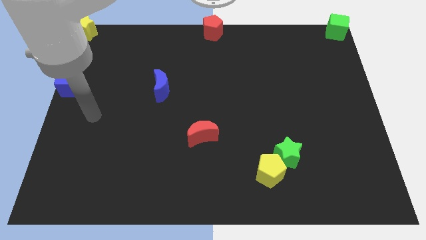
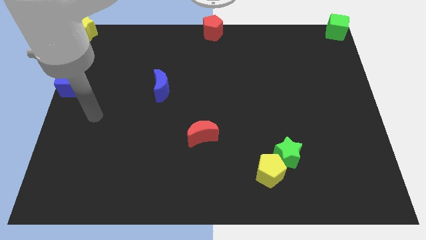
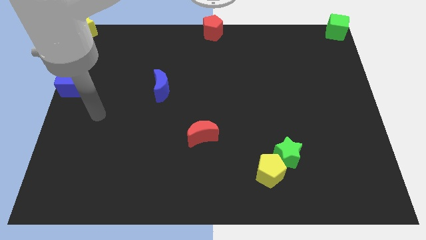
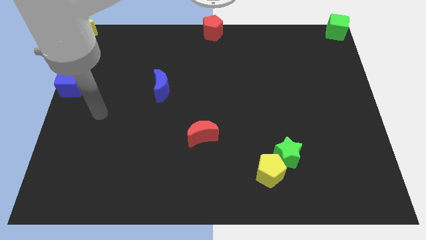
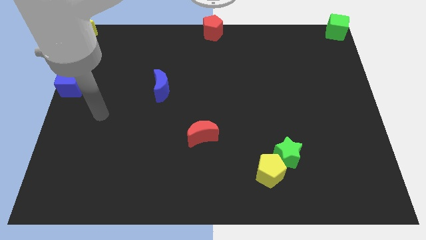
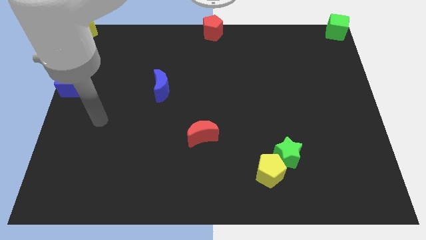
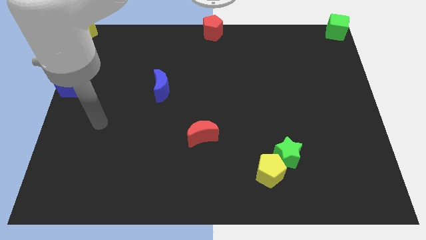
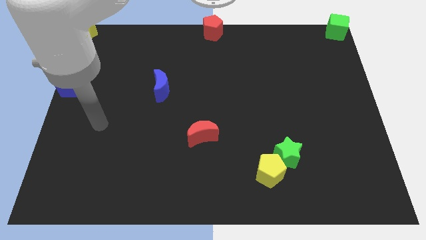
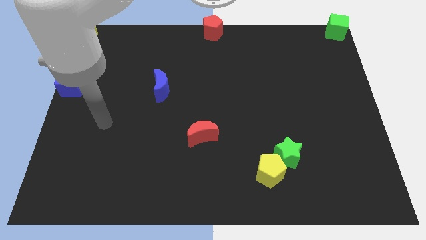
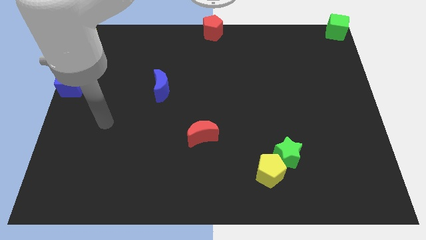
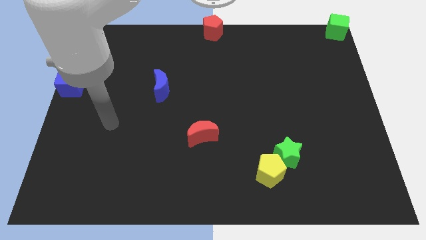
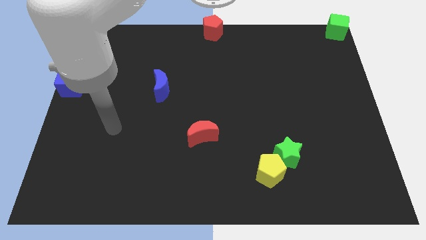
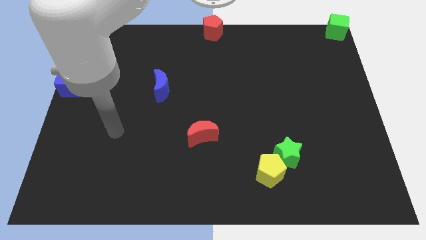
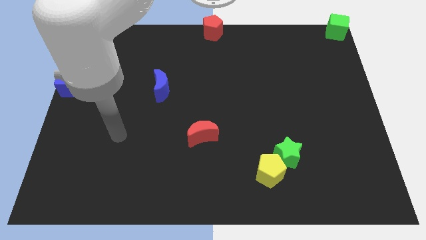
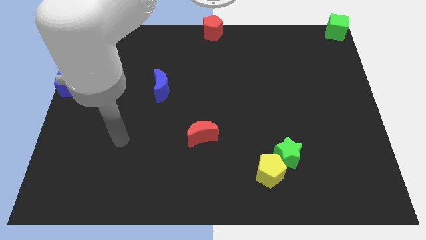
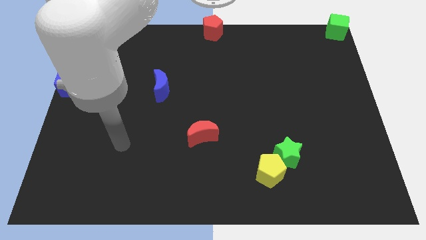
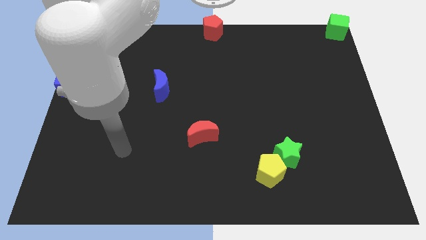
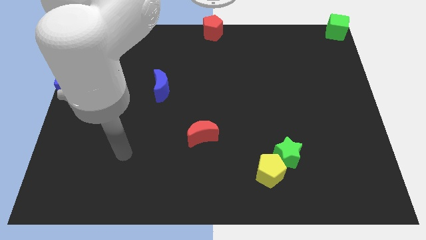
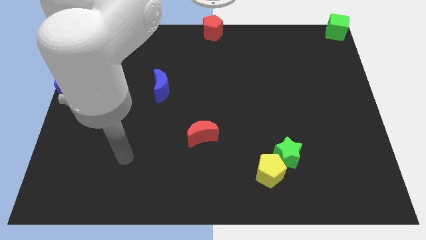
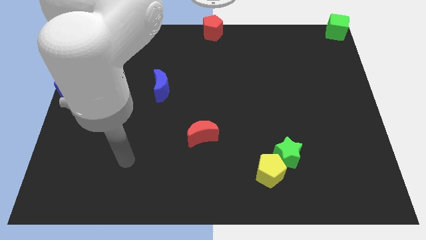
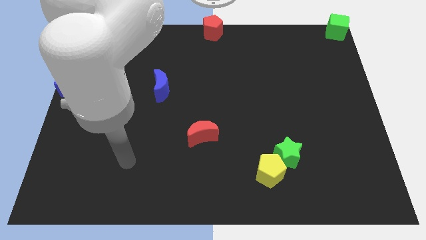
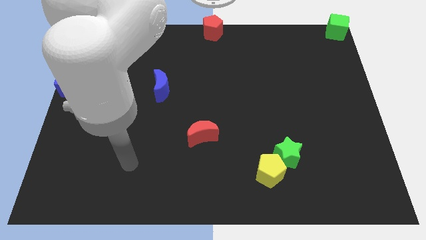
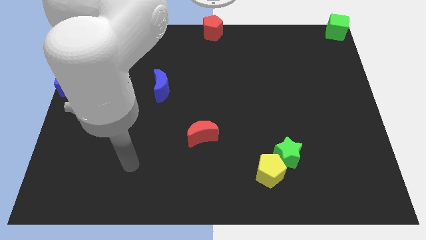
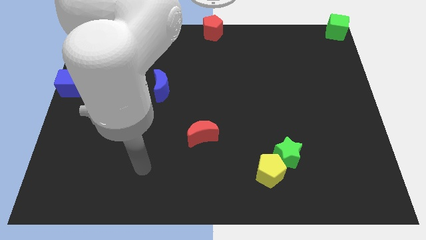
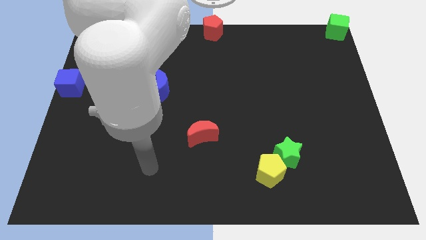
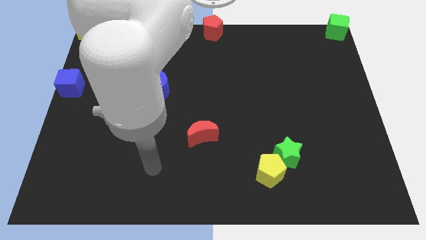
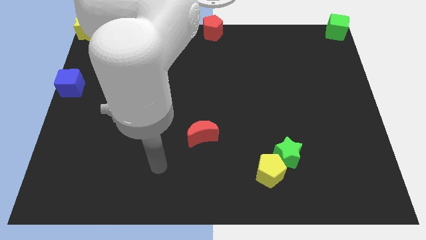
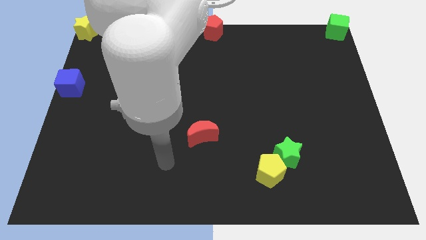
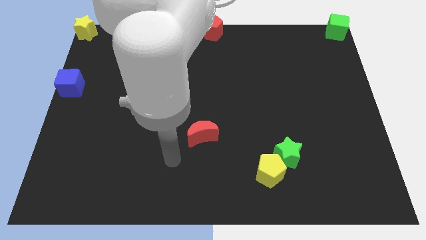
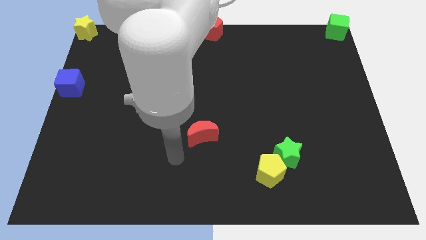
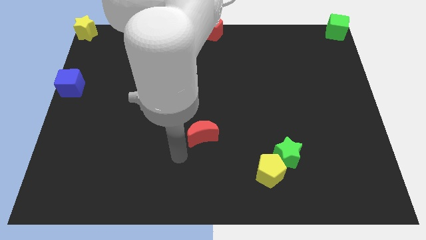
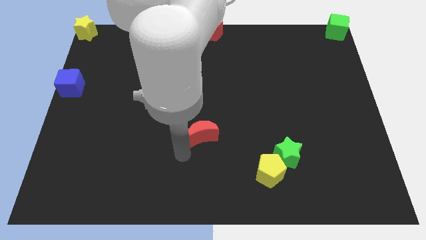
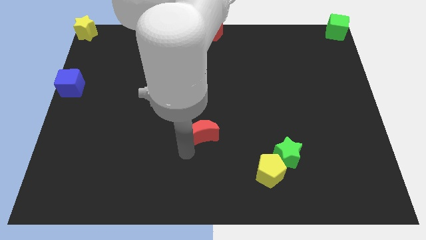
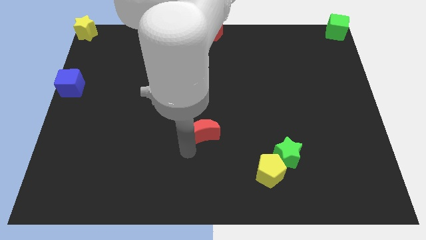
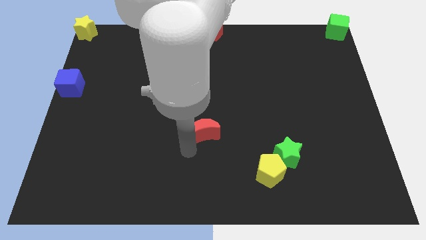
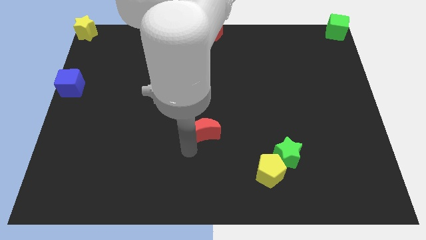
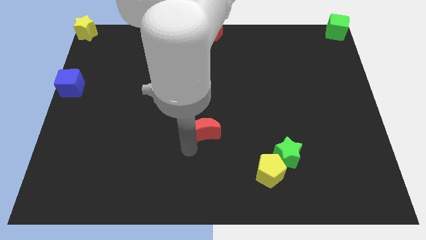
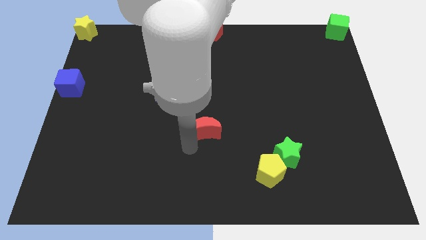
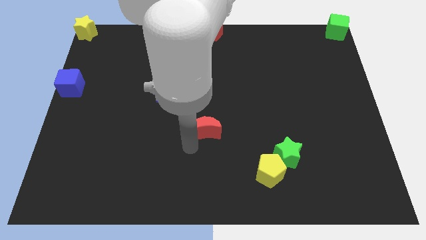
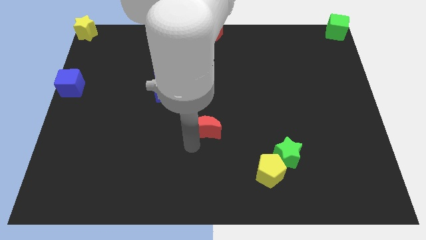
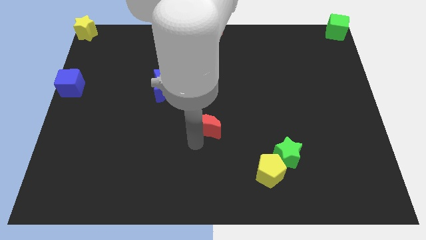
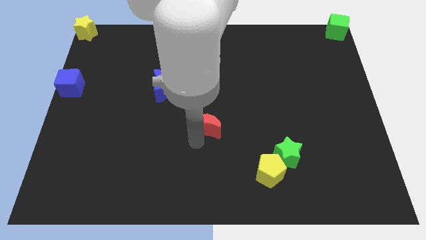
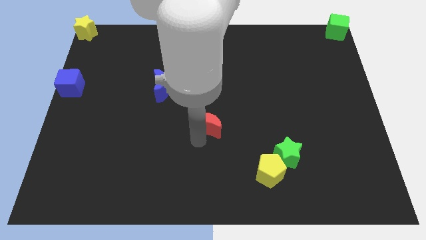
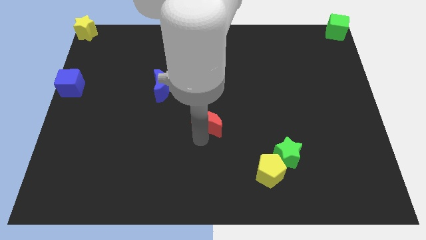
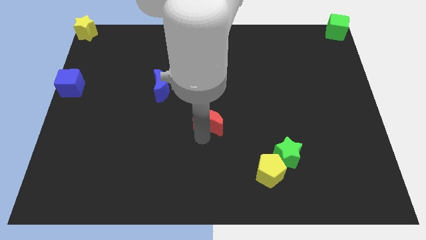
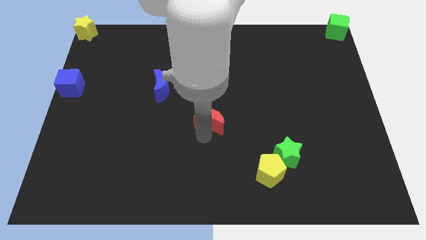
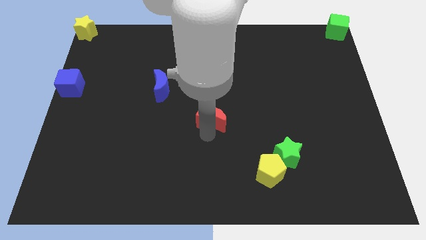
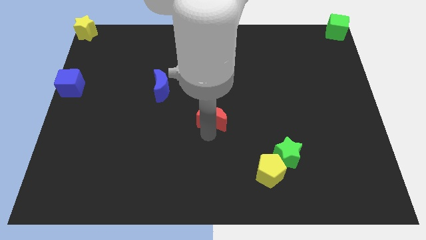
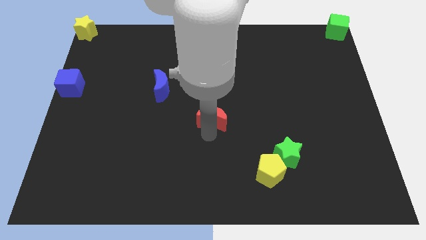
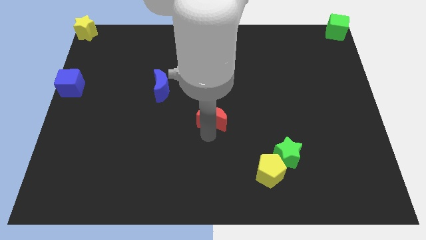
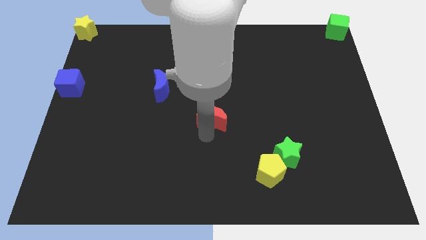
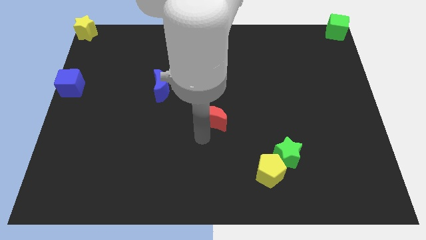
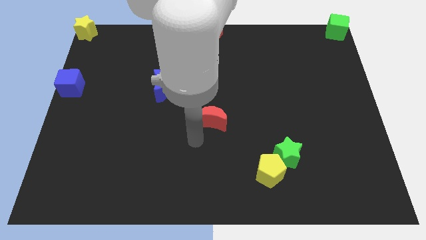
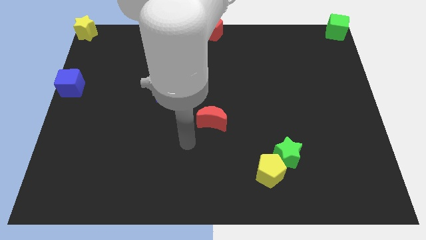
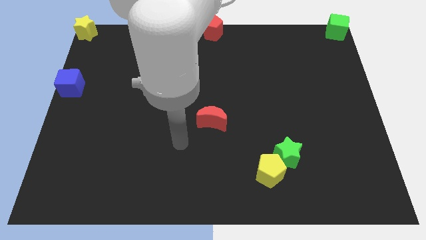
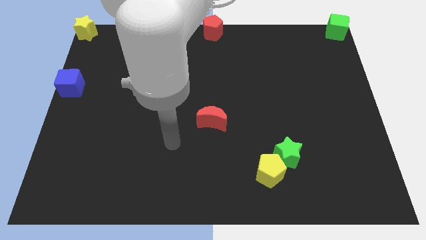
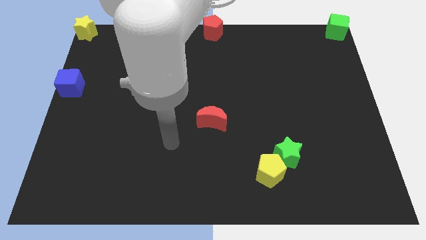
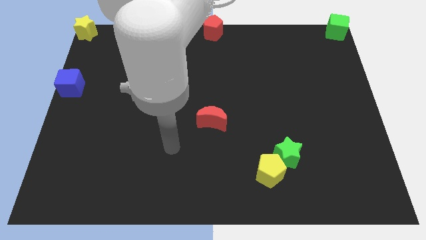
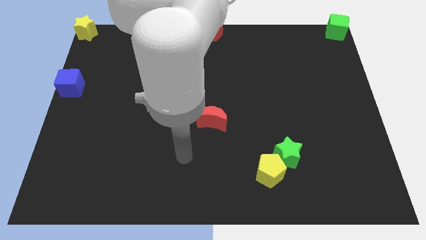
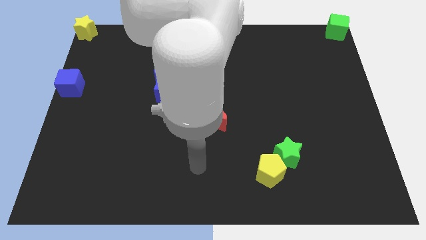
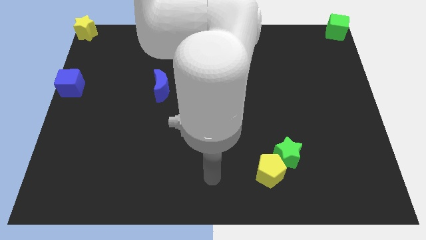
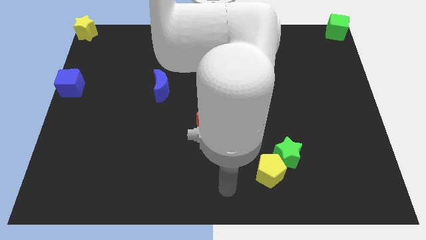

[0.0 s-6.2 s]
slightly push the red moon upwards

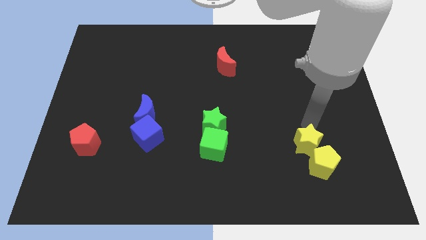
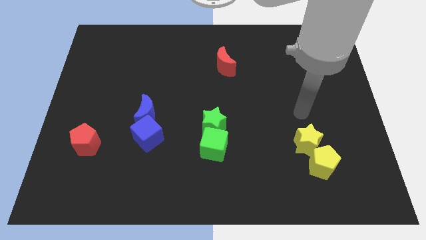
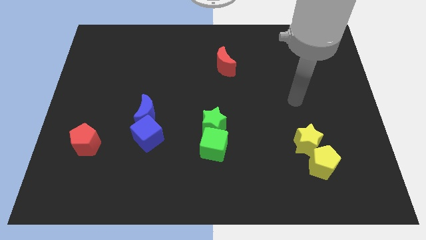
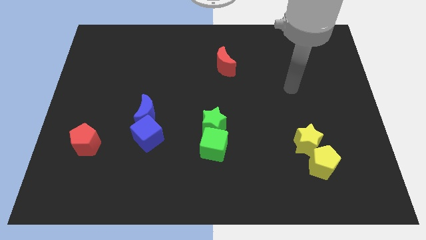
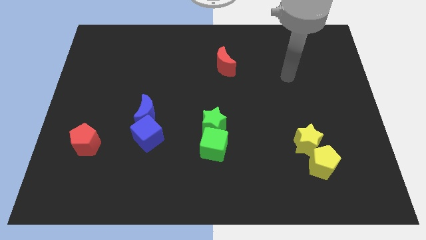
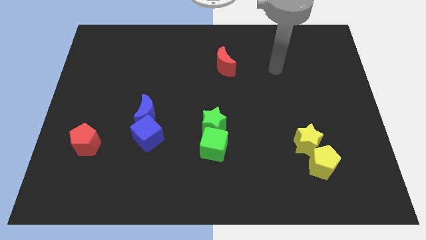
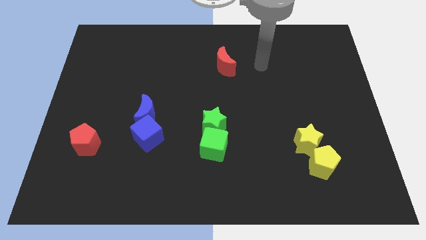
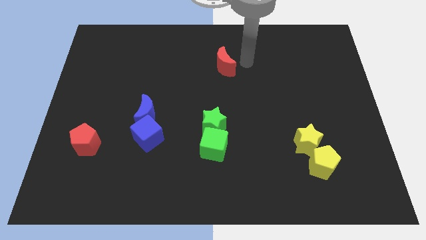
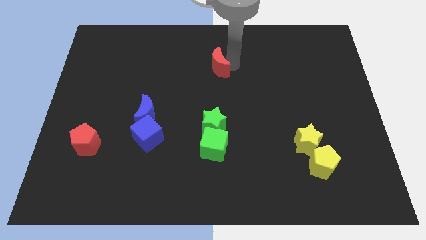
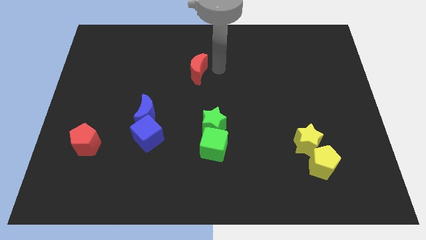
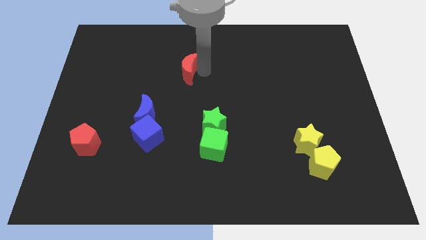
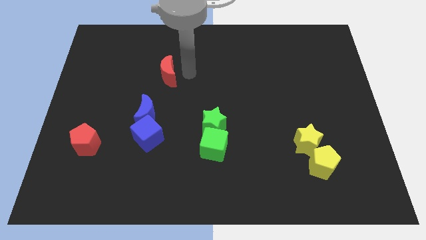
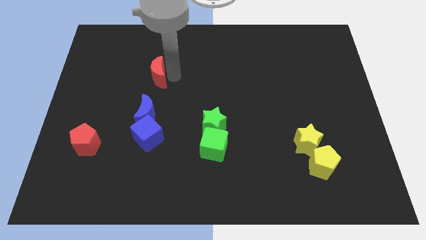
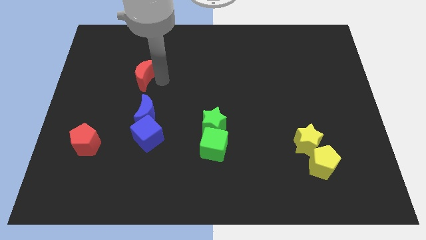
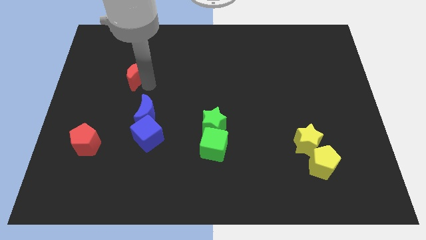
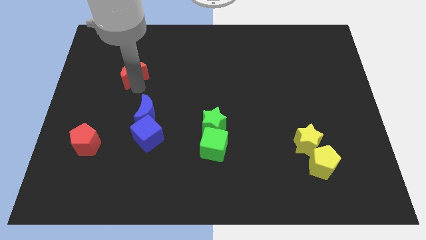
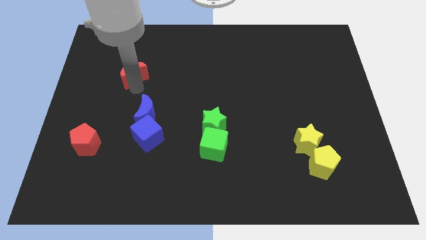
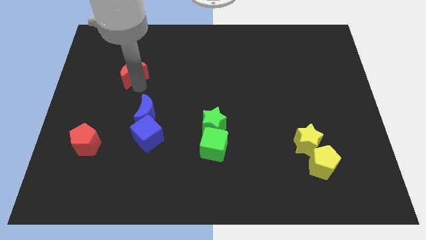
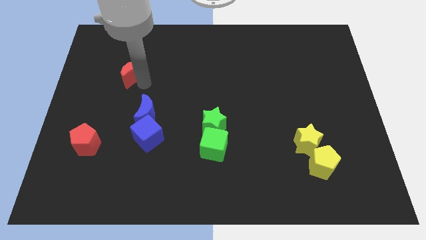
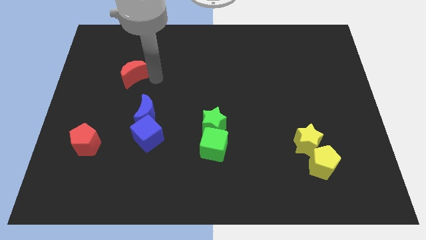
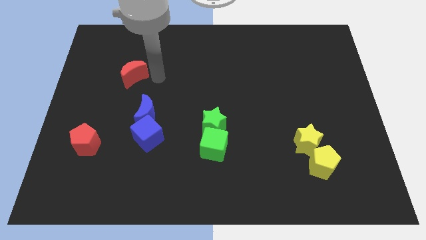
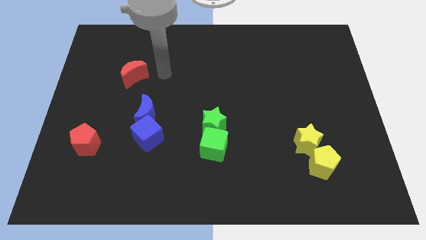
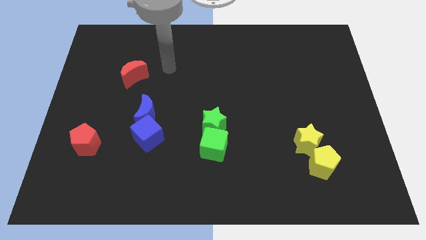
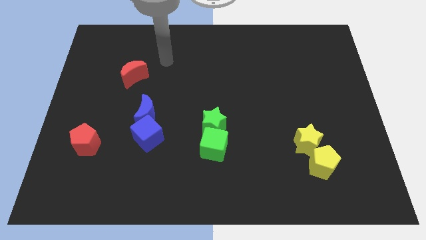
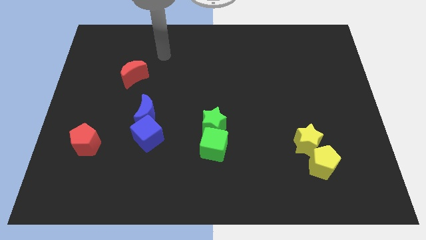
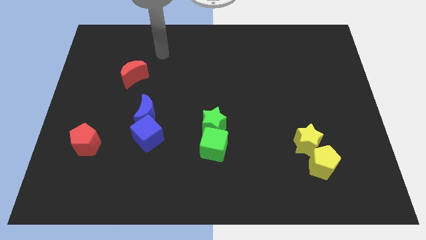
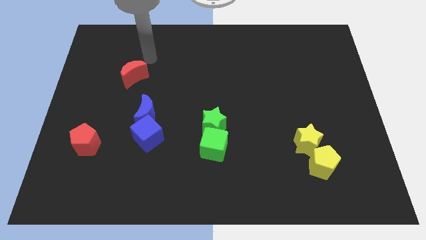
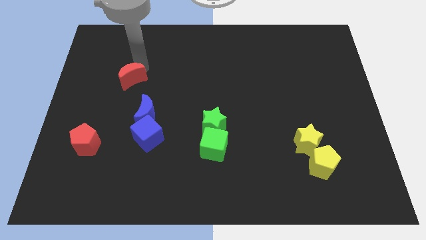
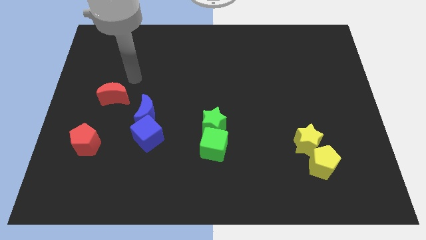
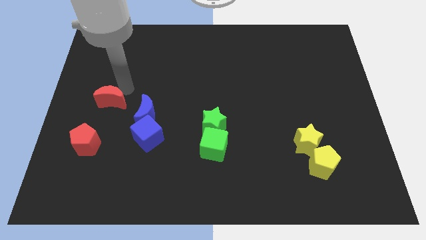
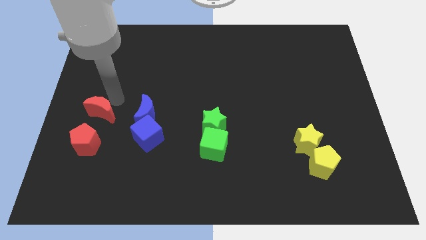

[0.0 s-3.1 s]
move the red crescent to the top left side of the blue moon
